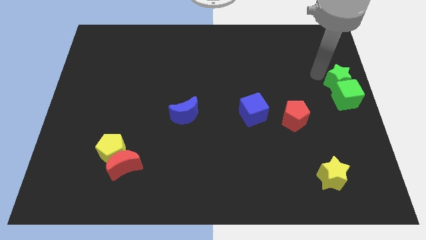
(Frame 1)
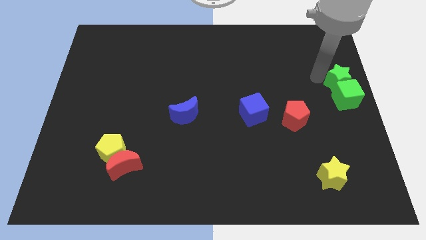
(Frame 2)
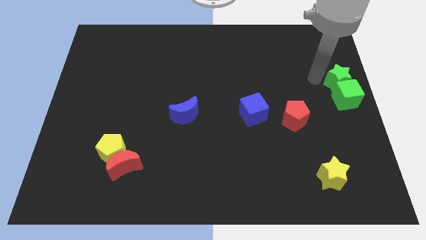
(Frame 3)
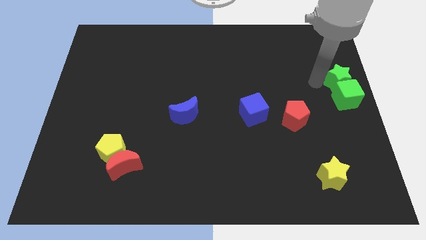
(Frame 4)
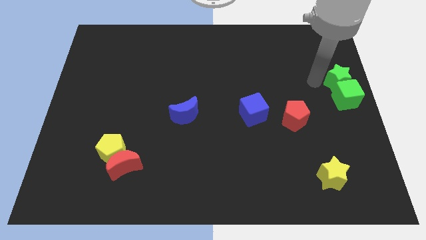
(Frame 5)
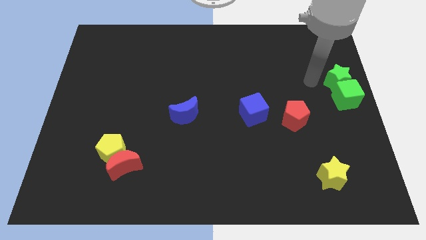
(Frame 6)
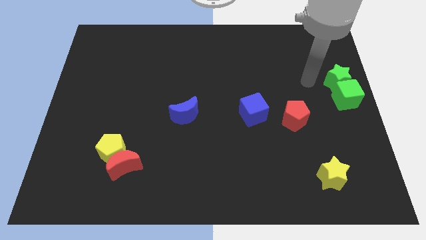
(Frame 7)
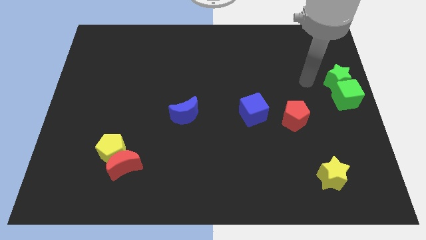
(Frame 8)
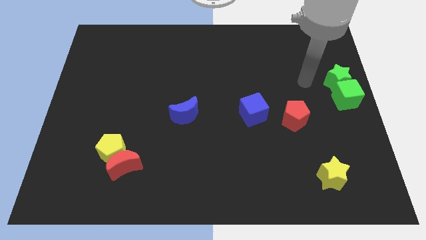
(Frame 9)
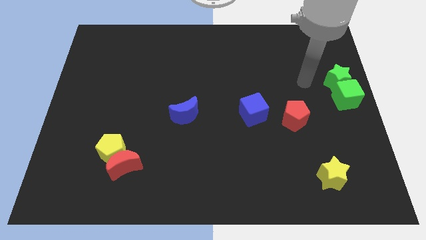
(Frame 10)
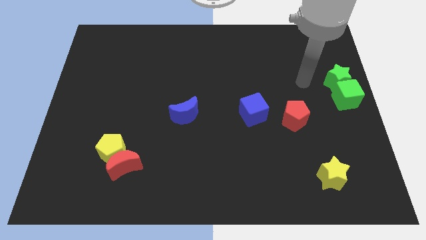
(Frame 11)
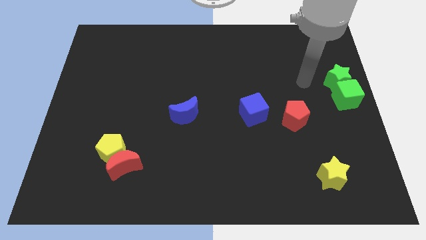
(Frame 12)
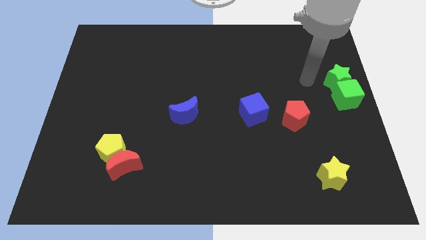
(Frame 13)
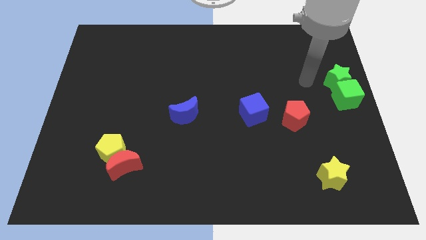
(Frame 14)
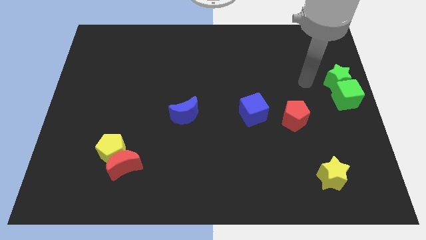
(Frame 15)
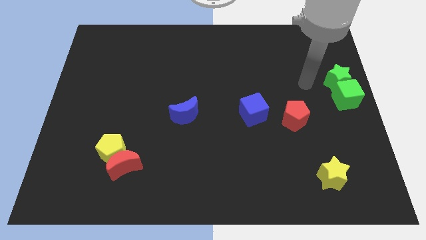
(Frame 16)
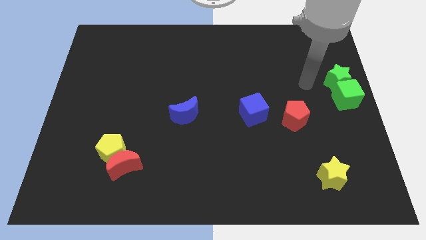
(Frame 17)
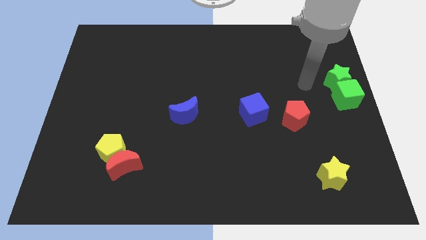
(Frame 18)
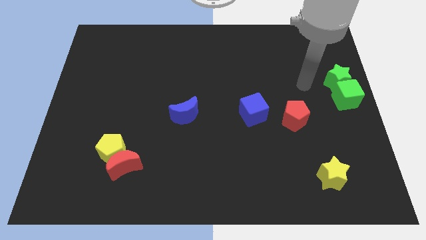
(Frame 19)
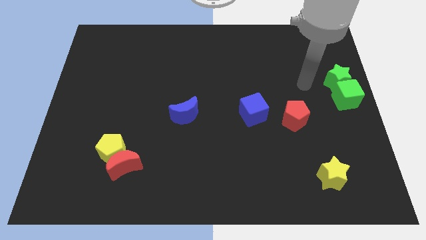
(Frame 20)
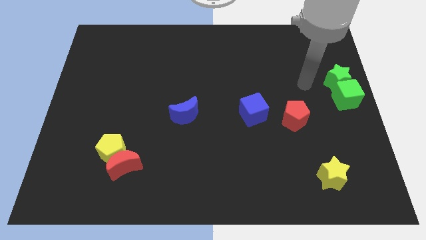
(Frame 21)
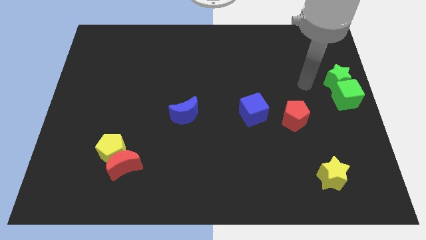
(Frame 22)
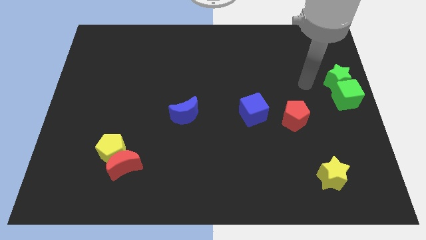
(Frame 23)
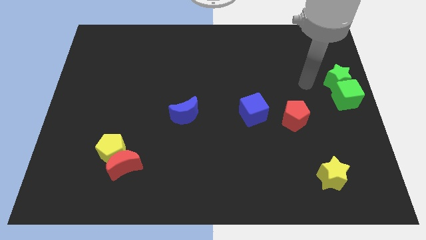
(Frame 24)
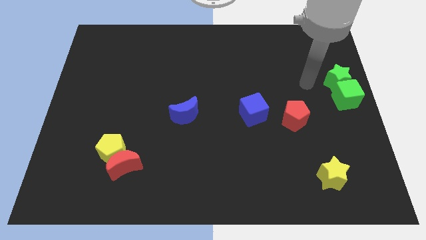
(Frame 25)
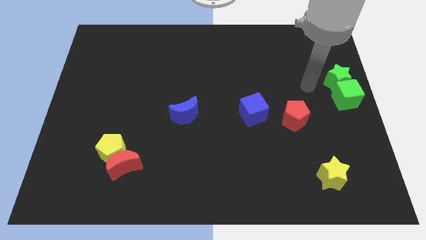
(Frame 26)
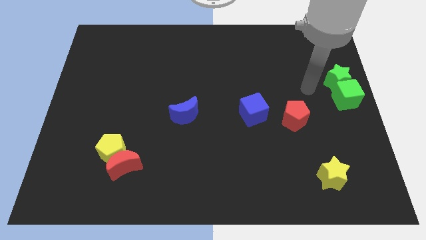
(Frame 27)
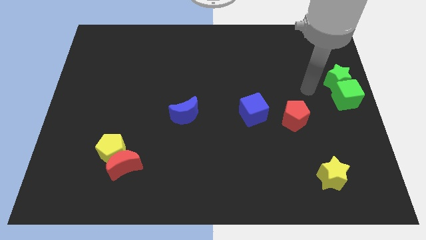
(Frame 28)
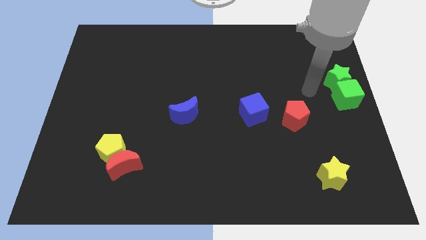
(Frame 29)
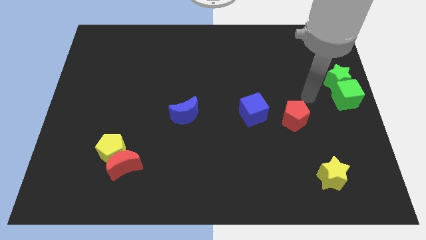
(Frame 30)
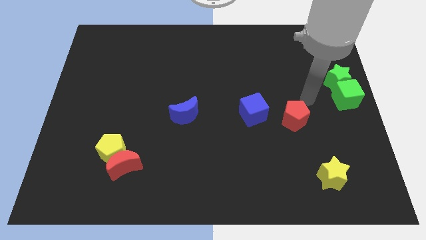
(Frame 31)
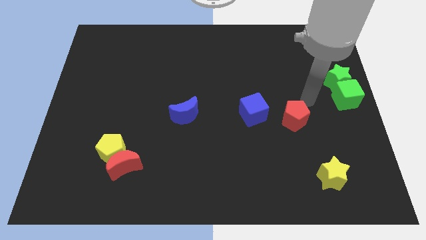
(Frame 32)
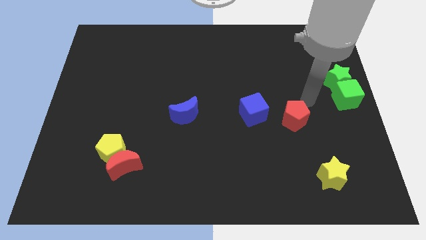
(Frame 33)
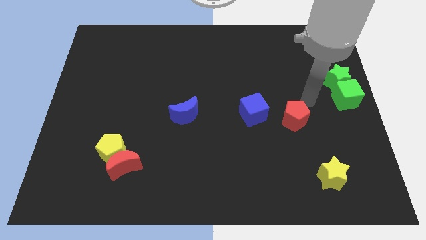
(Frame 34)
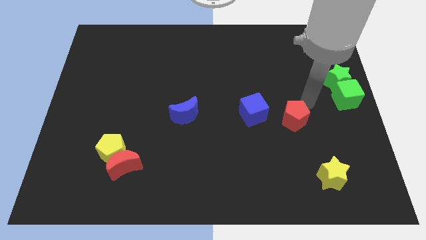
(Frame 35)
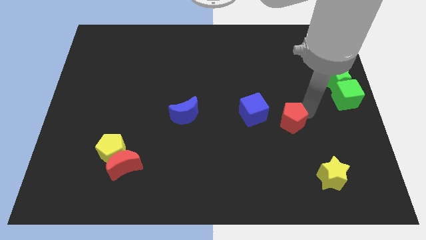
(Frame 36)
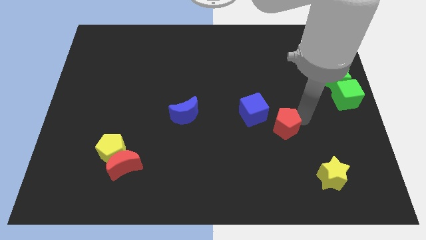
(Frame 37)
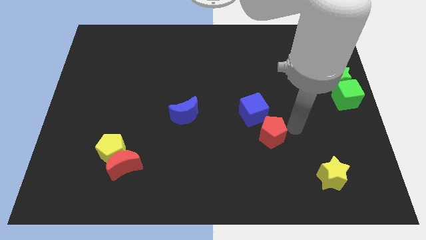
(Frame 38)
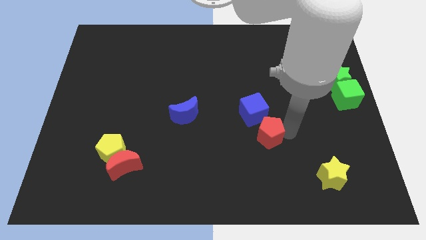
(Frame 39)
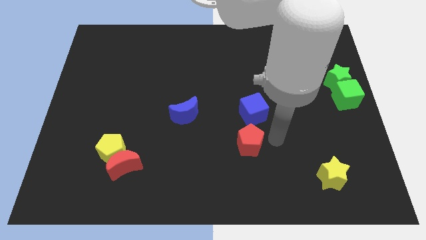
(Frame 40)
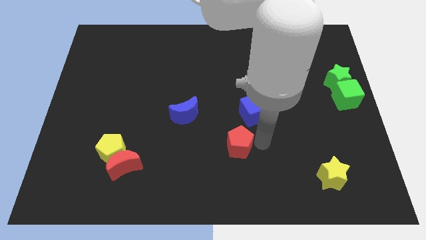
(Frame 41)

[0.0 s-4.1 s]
push the red pentagon below to the blue cube

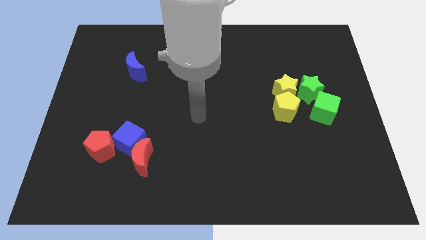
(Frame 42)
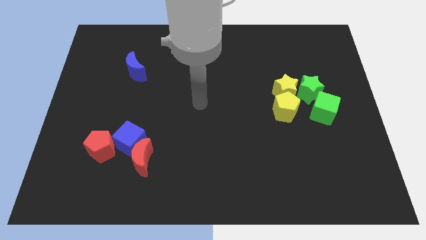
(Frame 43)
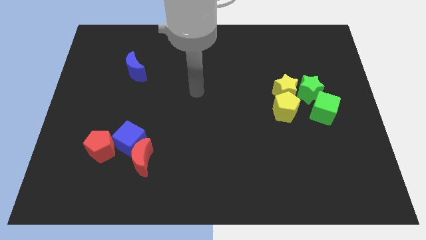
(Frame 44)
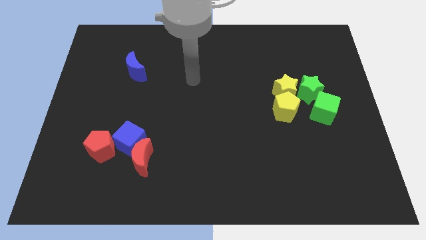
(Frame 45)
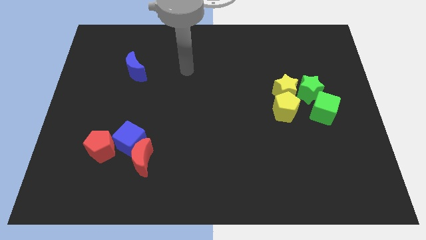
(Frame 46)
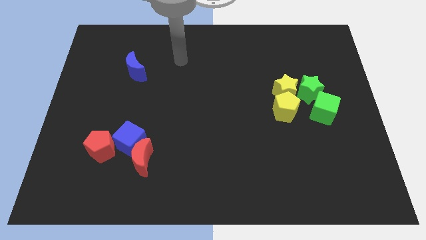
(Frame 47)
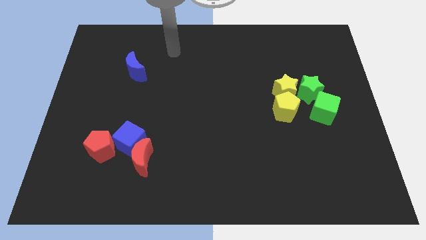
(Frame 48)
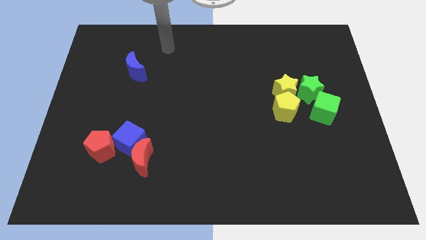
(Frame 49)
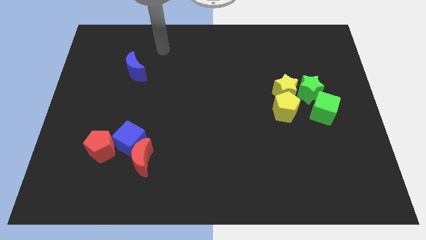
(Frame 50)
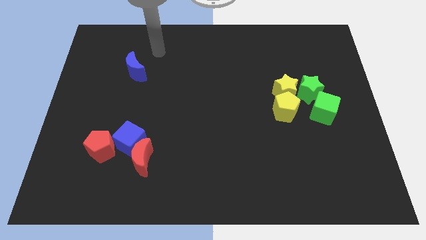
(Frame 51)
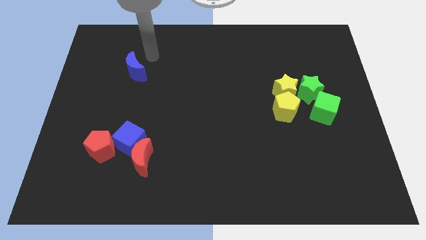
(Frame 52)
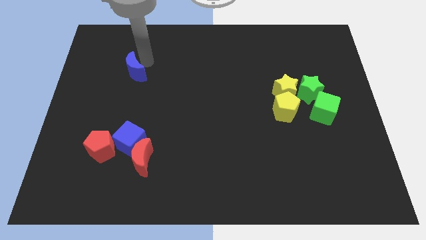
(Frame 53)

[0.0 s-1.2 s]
place your arm to the right of the blue moon

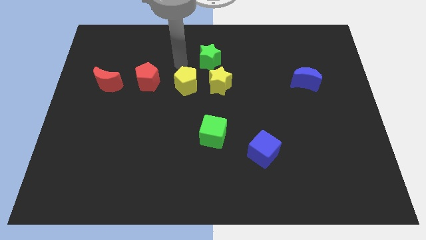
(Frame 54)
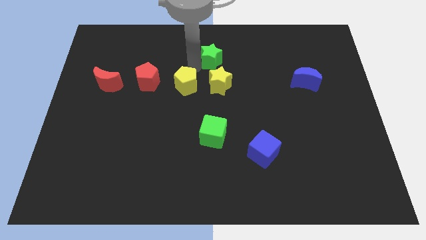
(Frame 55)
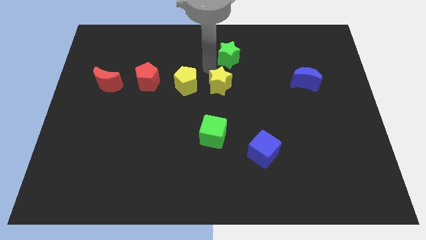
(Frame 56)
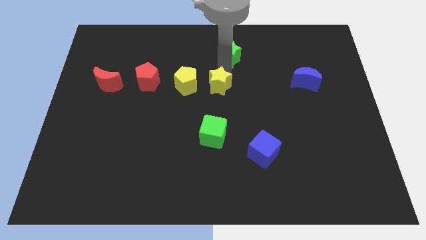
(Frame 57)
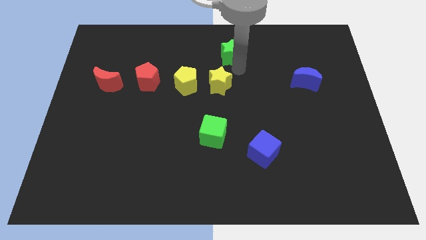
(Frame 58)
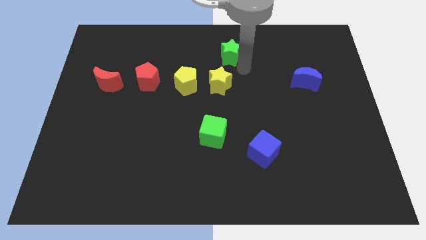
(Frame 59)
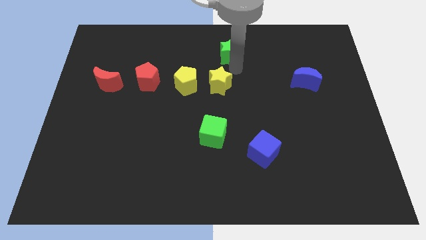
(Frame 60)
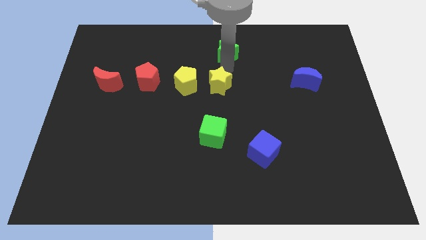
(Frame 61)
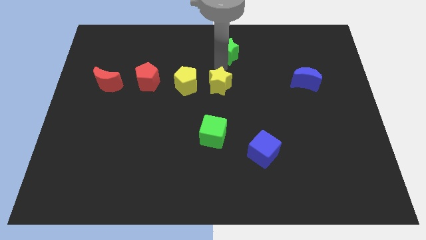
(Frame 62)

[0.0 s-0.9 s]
slightly move the green star towards up

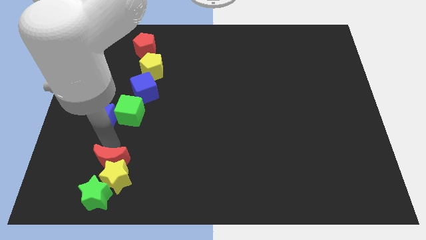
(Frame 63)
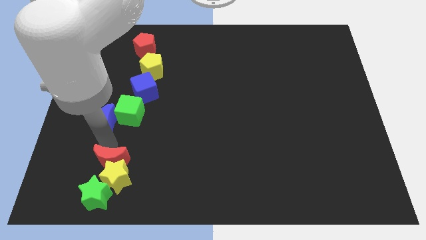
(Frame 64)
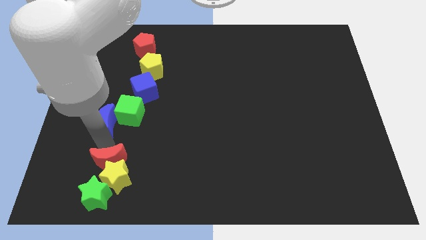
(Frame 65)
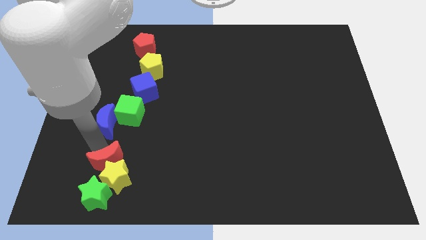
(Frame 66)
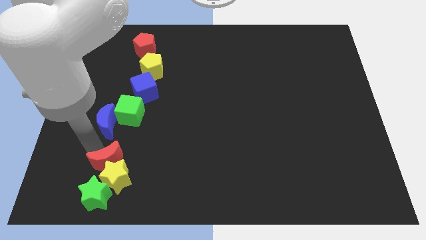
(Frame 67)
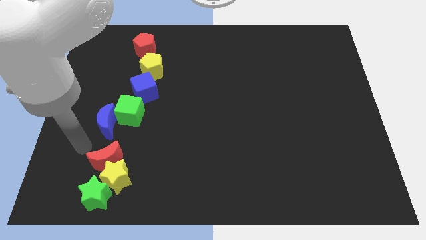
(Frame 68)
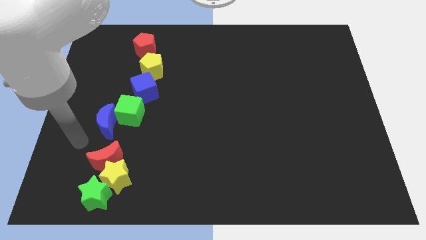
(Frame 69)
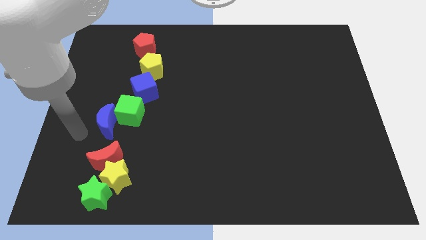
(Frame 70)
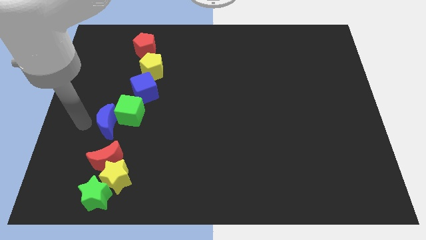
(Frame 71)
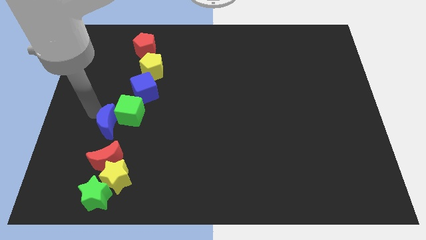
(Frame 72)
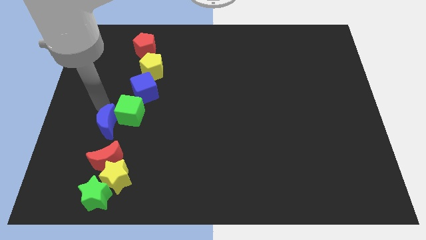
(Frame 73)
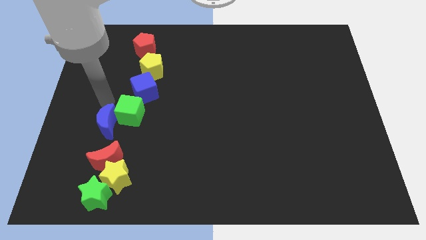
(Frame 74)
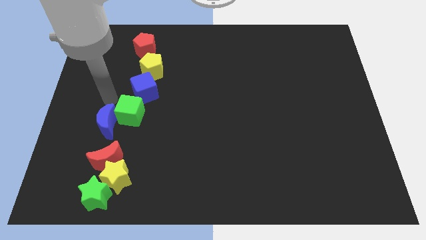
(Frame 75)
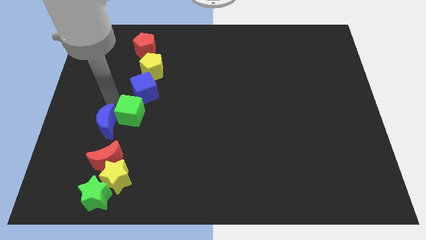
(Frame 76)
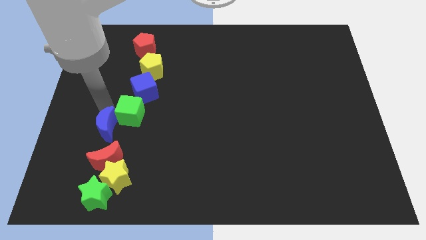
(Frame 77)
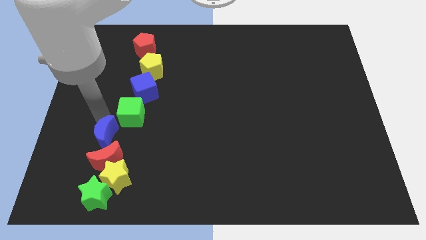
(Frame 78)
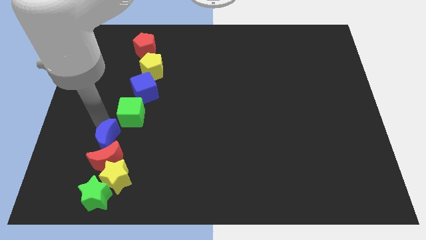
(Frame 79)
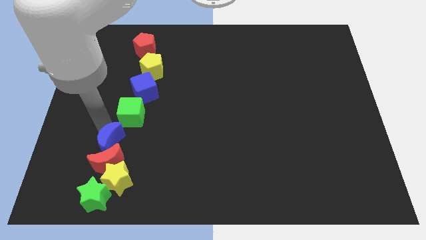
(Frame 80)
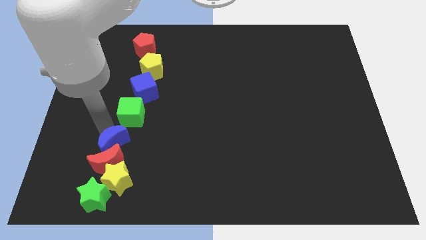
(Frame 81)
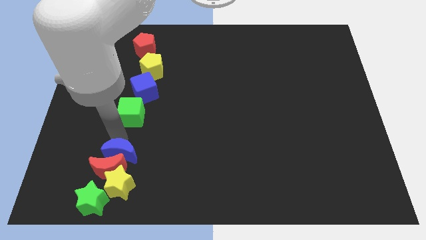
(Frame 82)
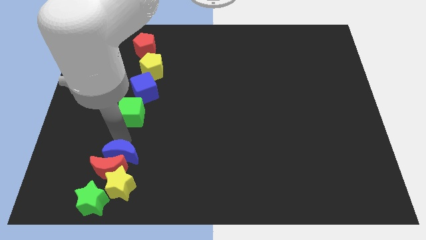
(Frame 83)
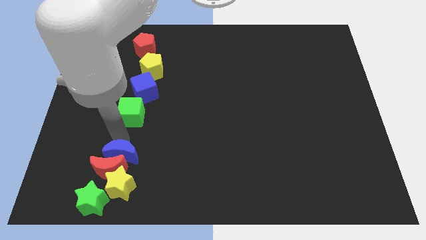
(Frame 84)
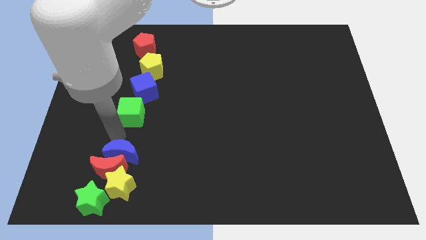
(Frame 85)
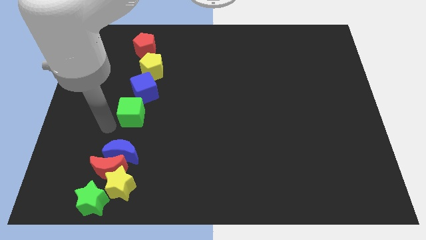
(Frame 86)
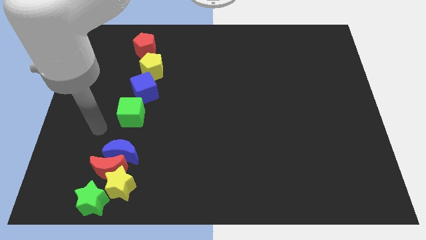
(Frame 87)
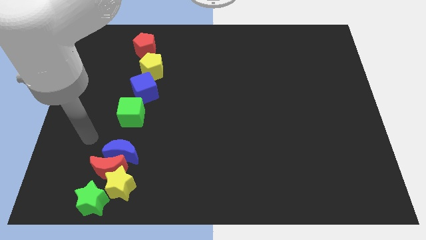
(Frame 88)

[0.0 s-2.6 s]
push the blue moon into the red moon
